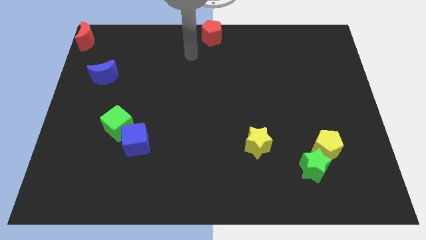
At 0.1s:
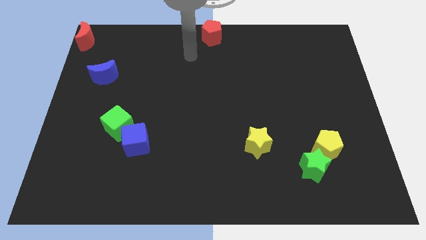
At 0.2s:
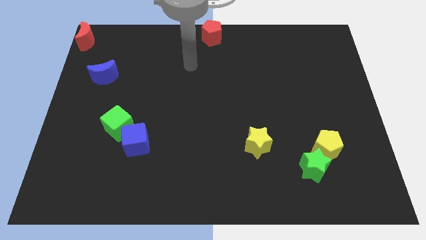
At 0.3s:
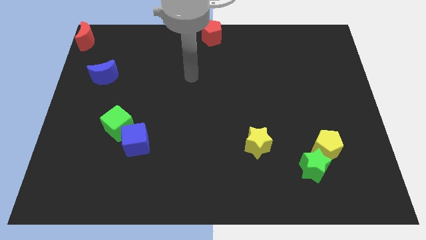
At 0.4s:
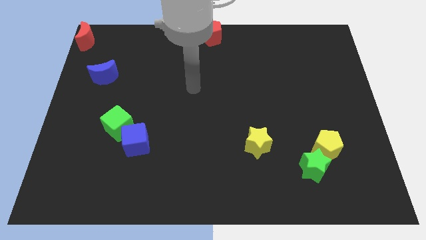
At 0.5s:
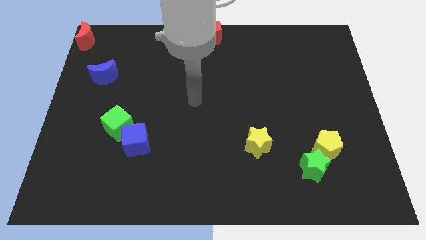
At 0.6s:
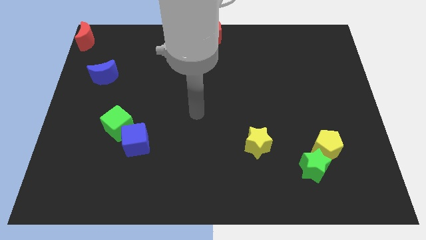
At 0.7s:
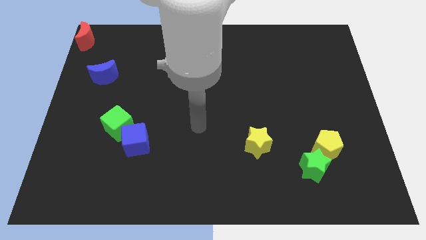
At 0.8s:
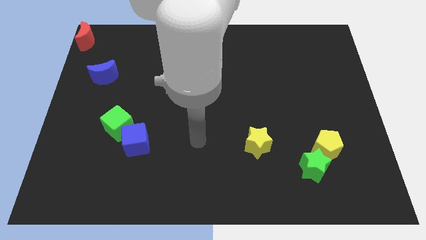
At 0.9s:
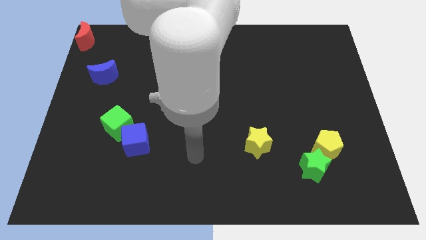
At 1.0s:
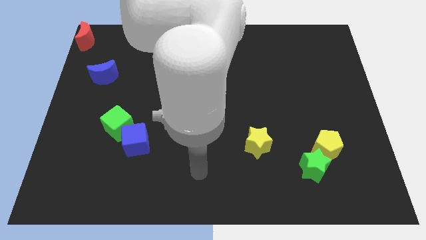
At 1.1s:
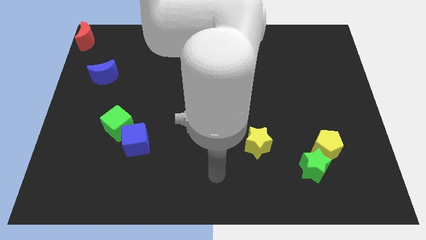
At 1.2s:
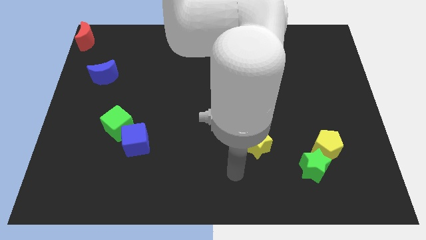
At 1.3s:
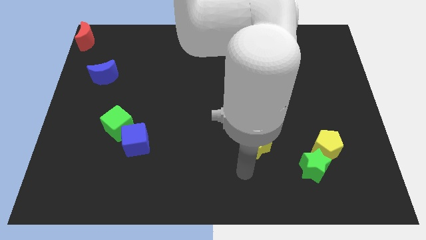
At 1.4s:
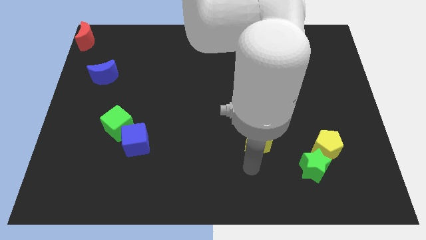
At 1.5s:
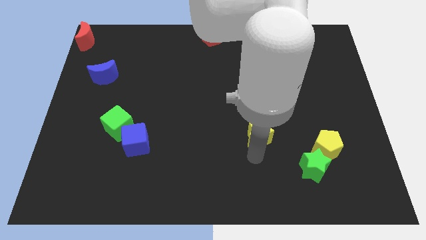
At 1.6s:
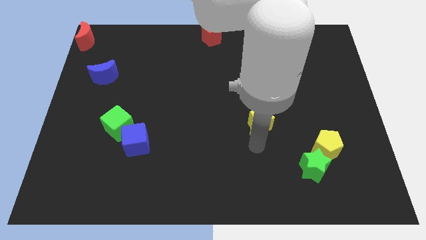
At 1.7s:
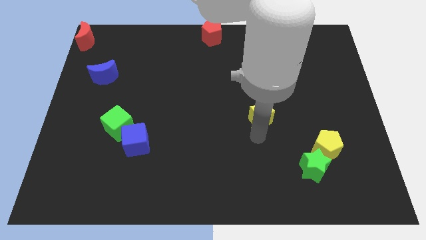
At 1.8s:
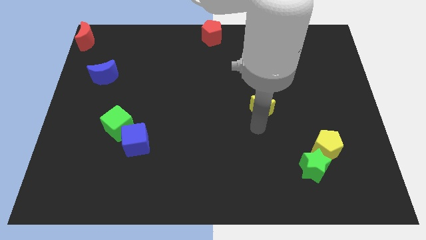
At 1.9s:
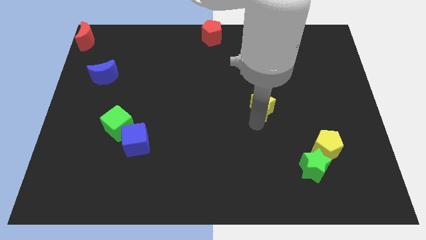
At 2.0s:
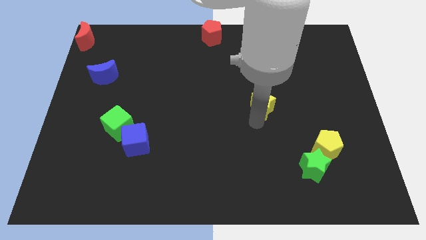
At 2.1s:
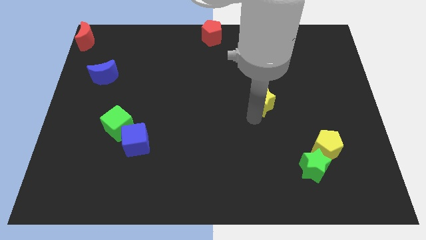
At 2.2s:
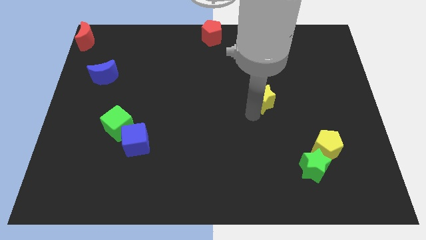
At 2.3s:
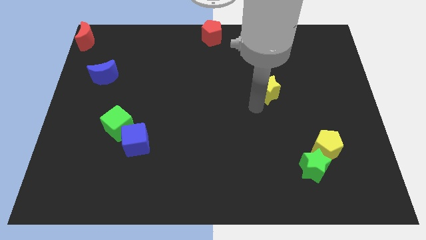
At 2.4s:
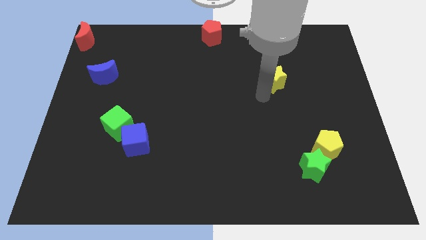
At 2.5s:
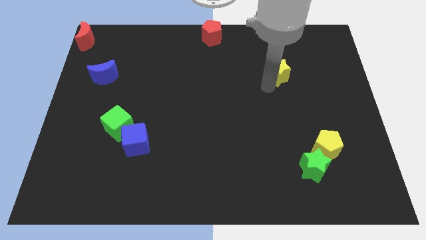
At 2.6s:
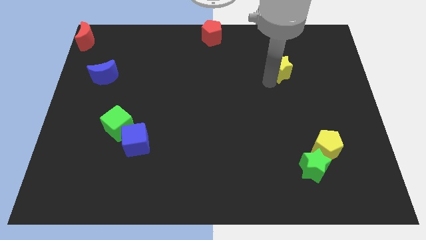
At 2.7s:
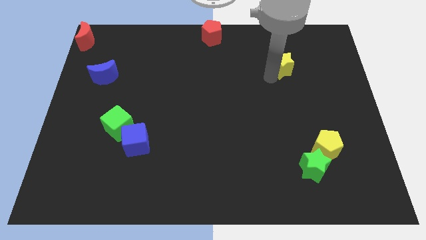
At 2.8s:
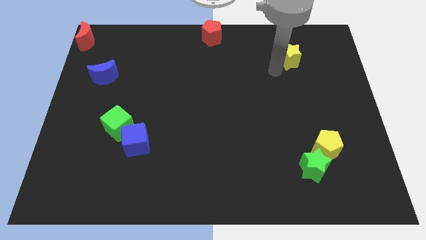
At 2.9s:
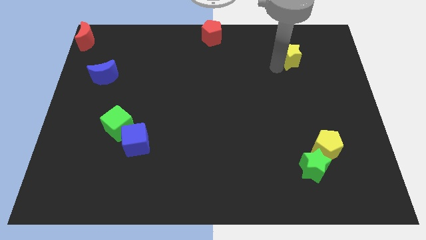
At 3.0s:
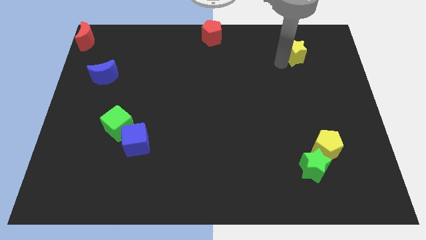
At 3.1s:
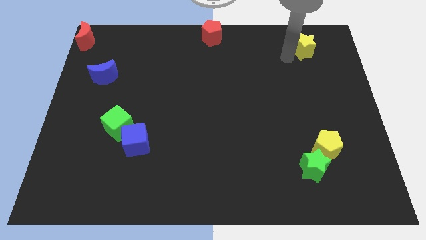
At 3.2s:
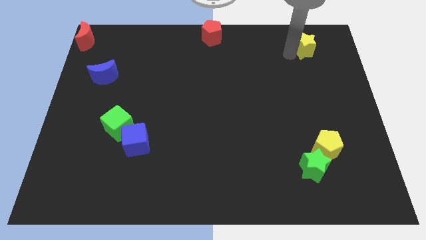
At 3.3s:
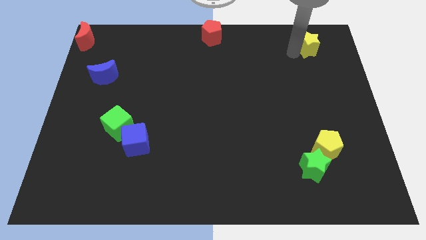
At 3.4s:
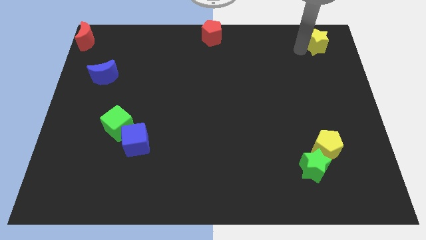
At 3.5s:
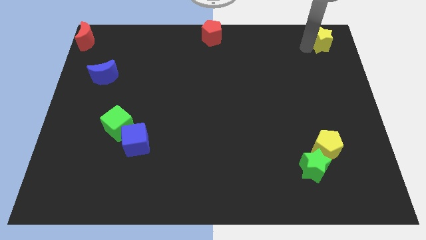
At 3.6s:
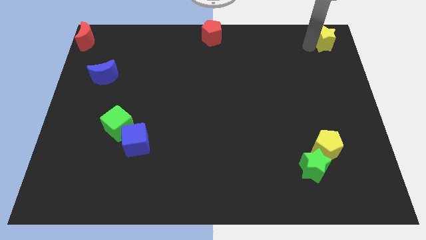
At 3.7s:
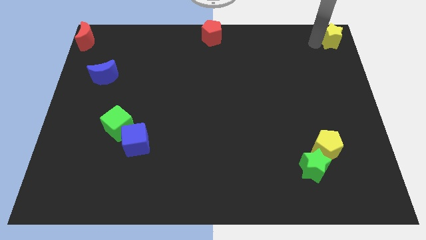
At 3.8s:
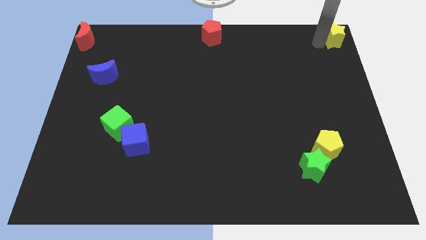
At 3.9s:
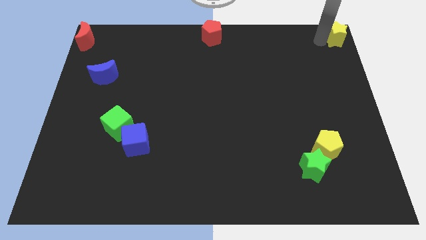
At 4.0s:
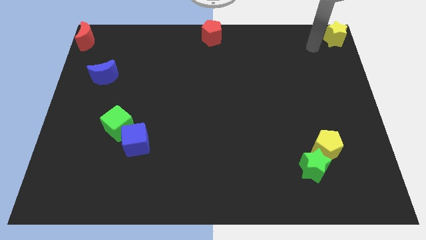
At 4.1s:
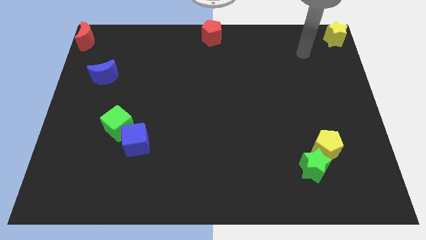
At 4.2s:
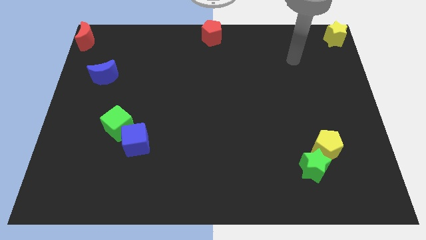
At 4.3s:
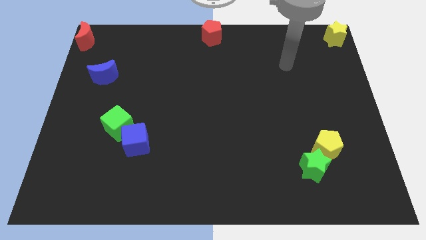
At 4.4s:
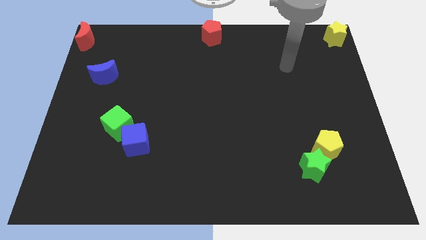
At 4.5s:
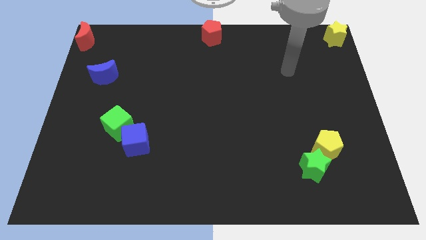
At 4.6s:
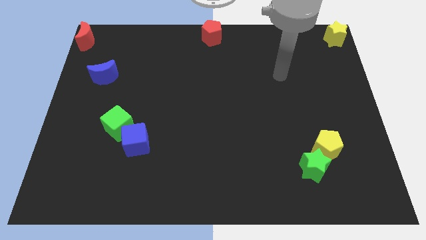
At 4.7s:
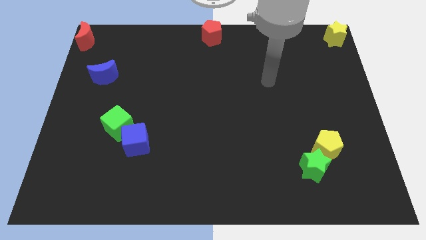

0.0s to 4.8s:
push the yellow star to the top right corner of the board

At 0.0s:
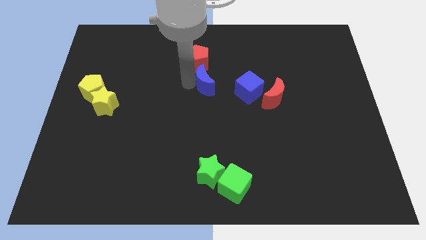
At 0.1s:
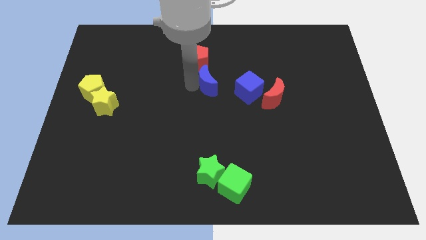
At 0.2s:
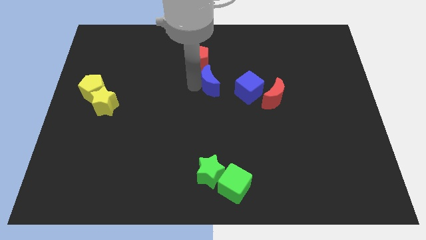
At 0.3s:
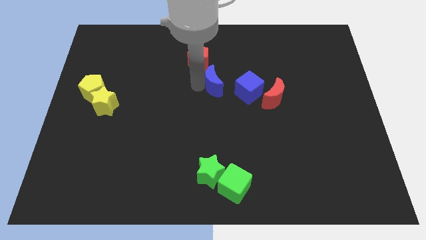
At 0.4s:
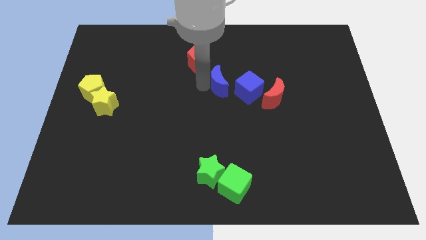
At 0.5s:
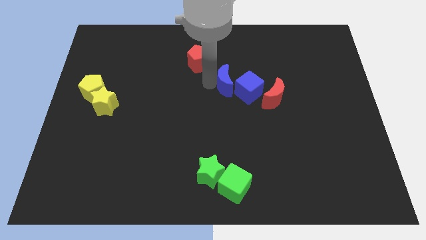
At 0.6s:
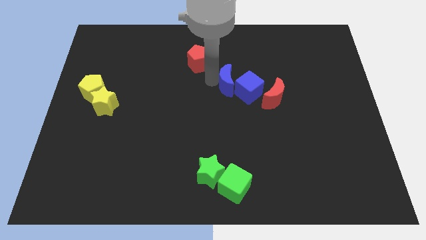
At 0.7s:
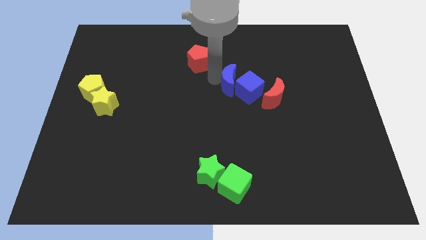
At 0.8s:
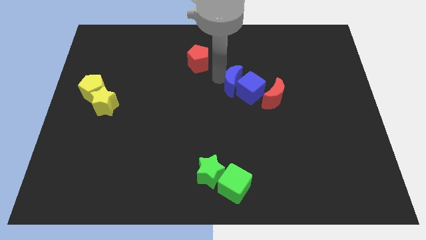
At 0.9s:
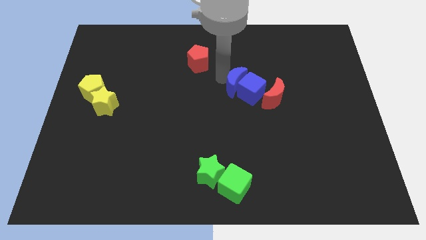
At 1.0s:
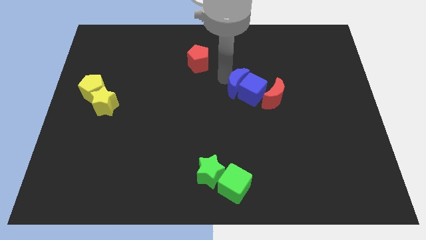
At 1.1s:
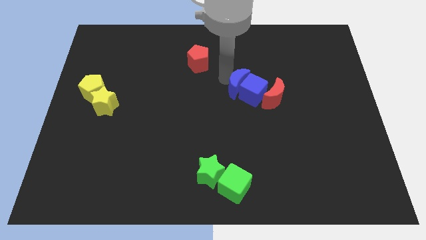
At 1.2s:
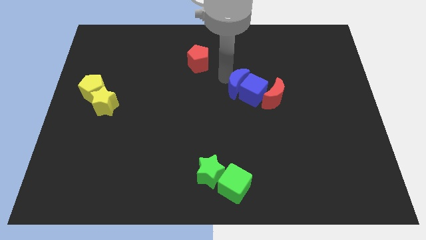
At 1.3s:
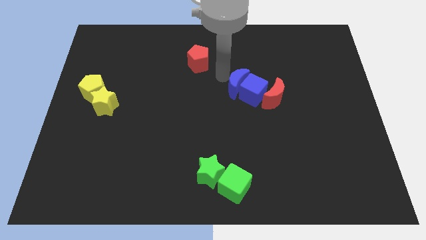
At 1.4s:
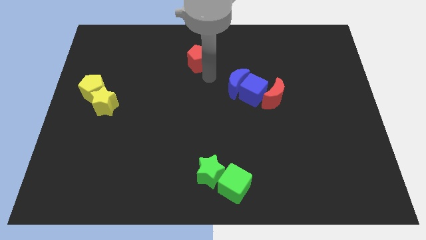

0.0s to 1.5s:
push the blue crescent into blue cube

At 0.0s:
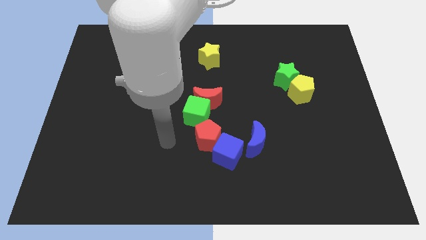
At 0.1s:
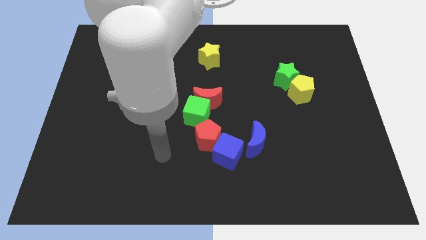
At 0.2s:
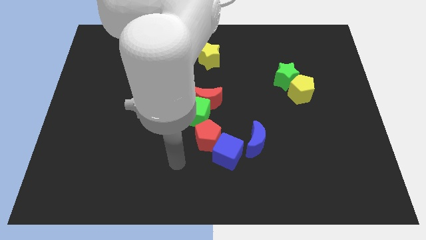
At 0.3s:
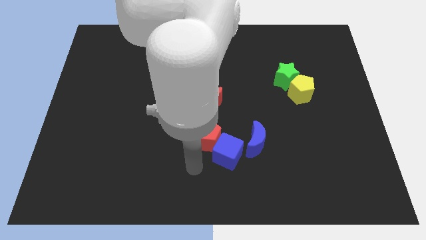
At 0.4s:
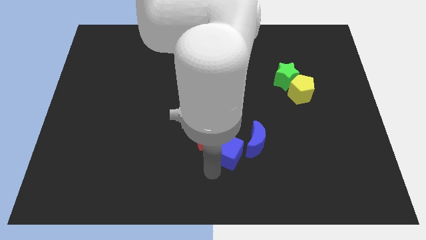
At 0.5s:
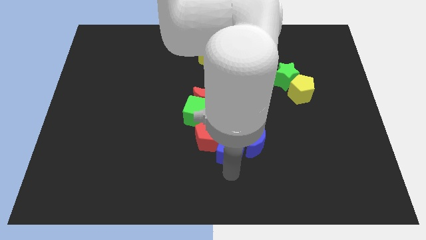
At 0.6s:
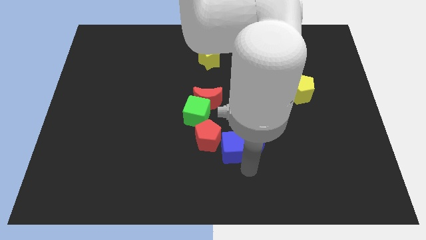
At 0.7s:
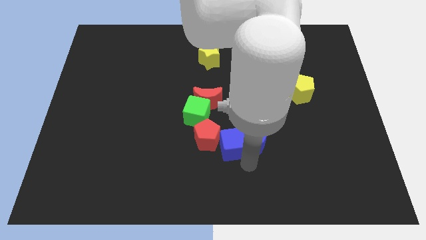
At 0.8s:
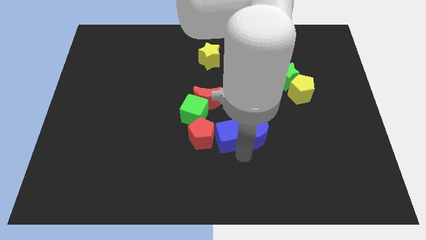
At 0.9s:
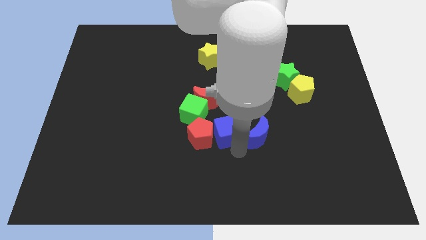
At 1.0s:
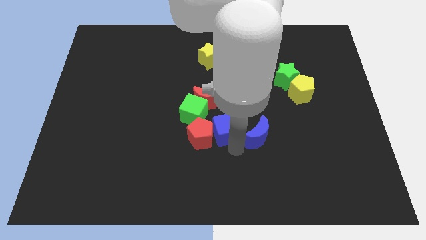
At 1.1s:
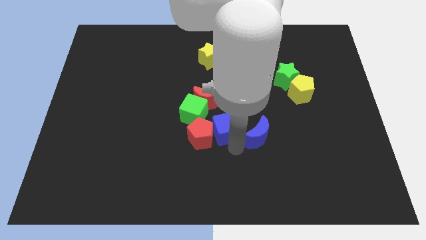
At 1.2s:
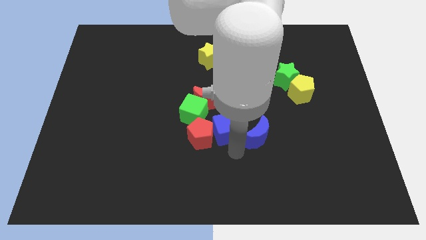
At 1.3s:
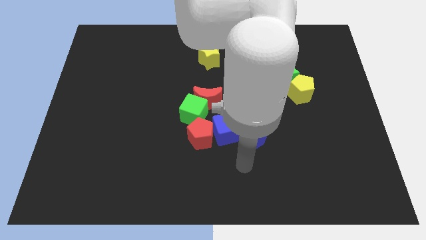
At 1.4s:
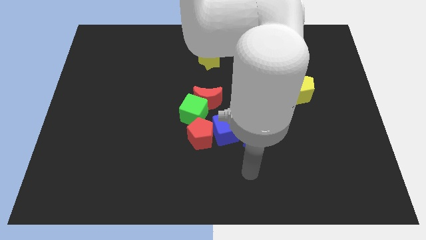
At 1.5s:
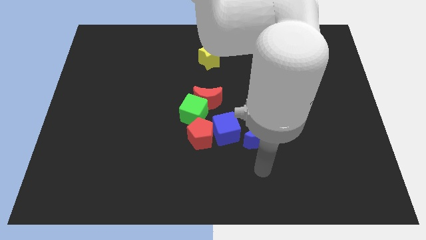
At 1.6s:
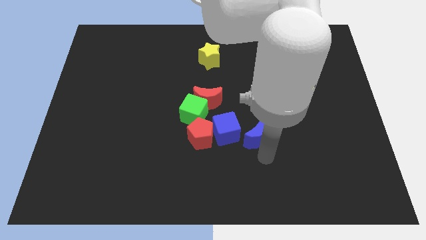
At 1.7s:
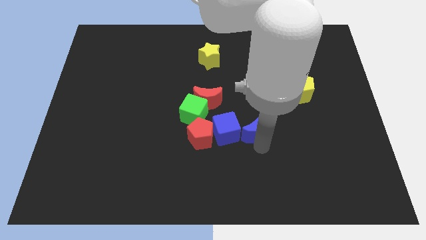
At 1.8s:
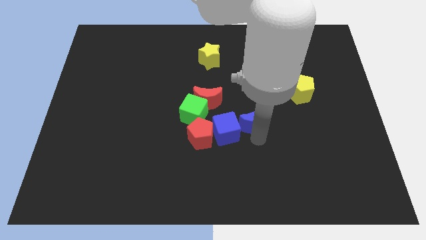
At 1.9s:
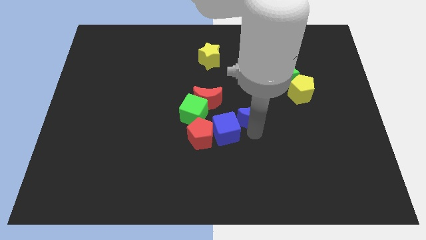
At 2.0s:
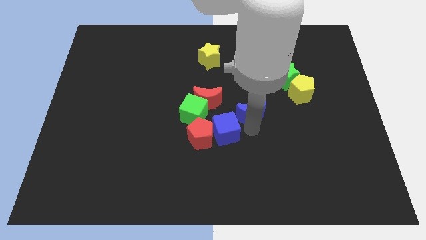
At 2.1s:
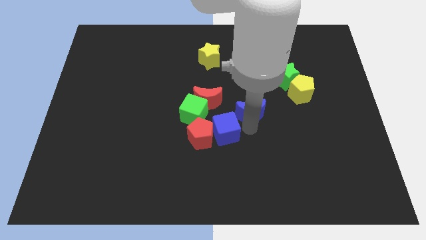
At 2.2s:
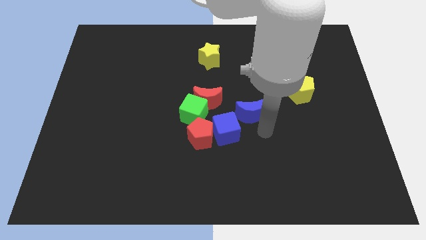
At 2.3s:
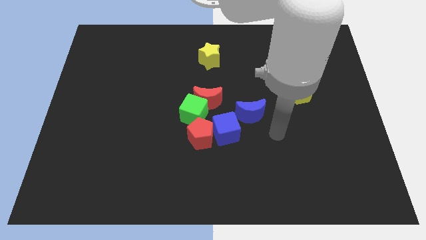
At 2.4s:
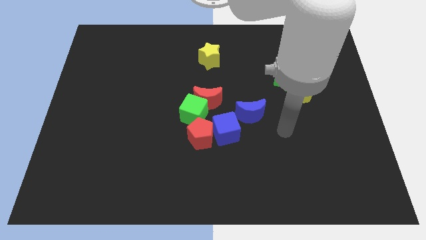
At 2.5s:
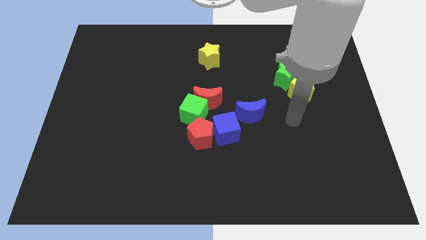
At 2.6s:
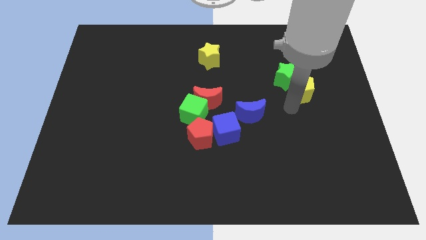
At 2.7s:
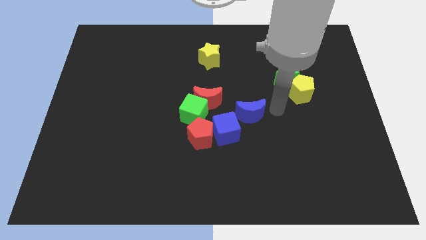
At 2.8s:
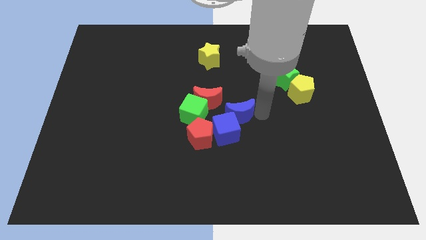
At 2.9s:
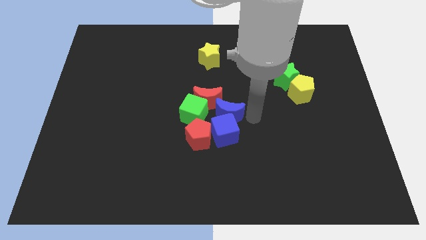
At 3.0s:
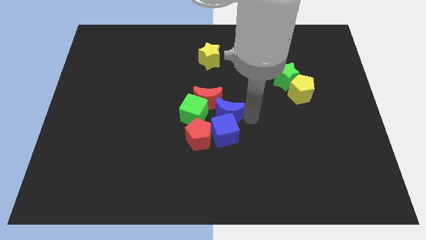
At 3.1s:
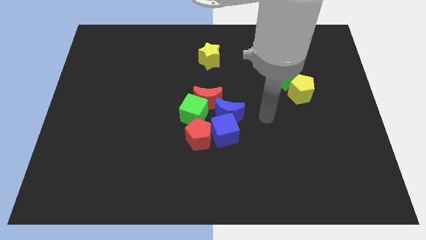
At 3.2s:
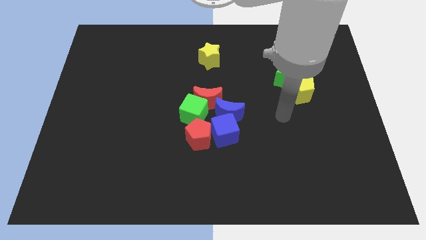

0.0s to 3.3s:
push the blue blocks into the green cube and red blocks
